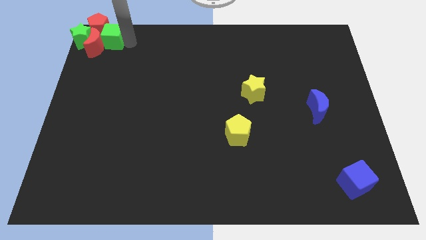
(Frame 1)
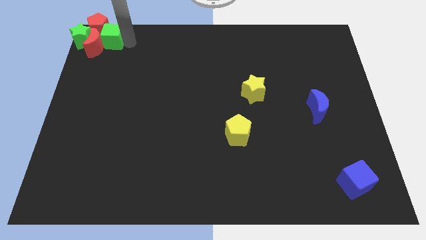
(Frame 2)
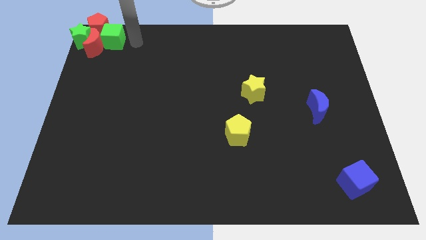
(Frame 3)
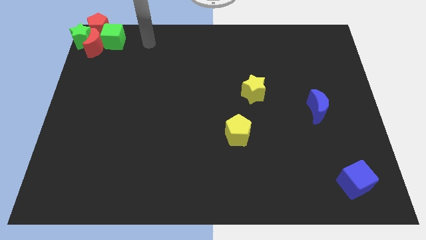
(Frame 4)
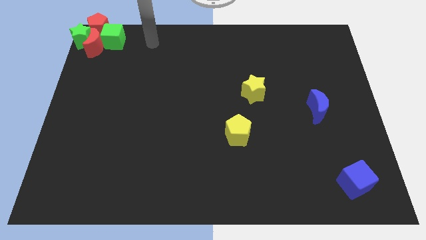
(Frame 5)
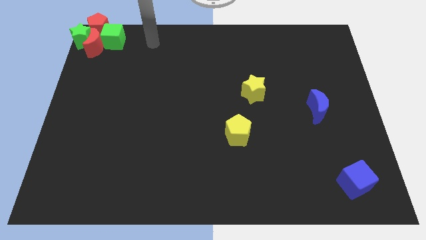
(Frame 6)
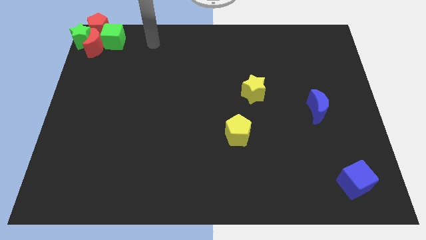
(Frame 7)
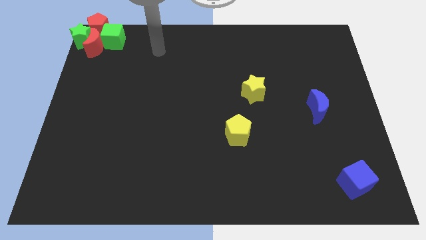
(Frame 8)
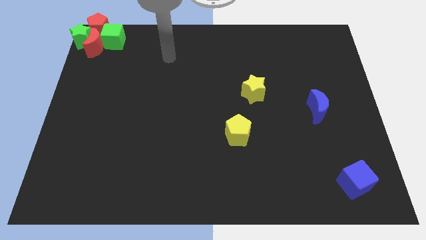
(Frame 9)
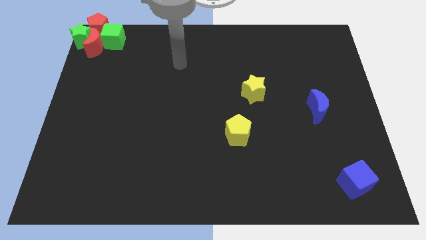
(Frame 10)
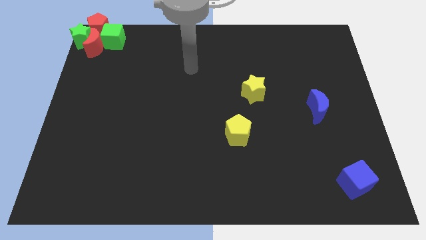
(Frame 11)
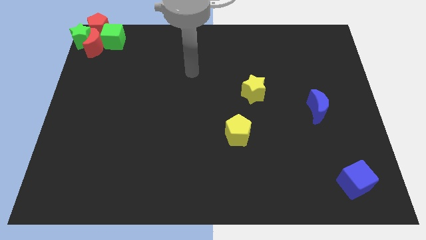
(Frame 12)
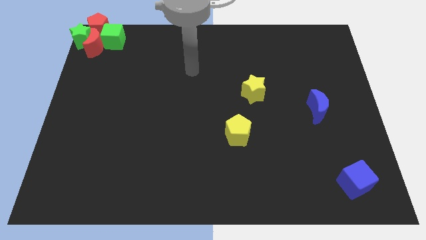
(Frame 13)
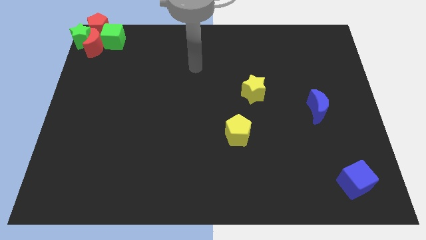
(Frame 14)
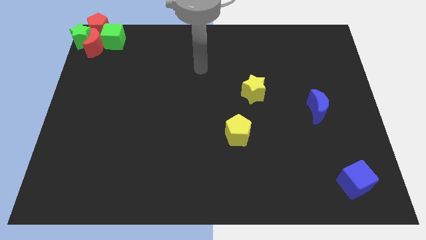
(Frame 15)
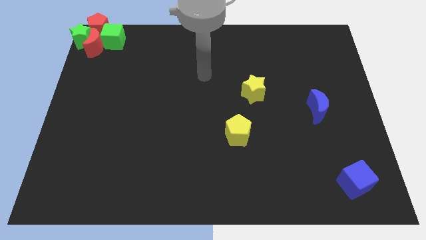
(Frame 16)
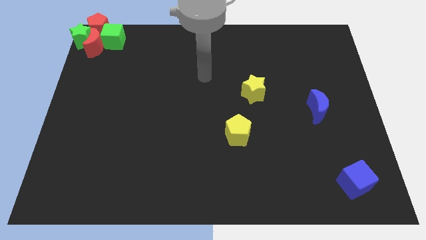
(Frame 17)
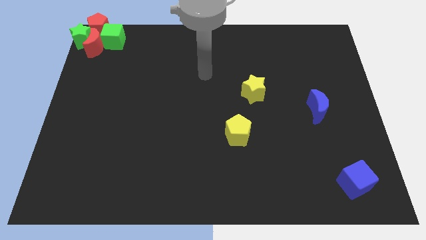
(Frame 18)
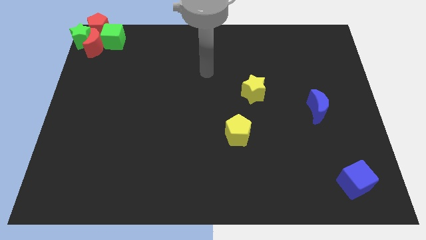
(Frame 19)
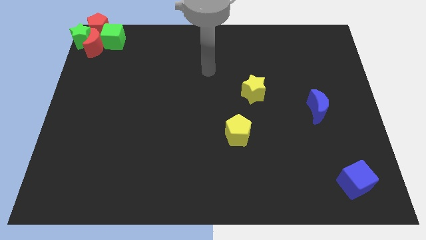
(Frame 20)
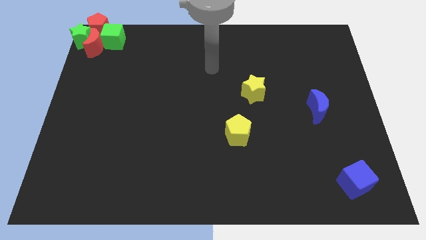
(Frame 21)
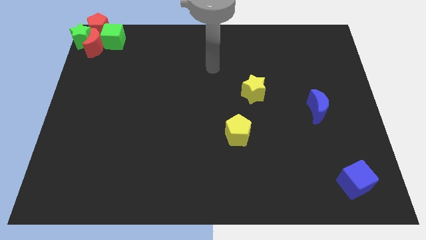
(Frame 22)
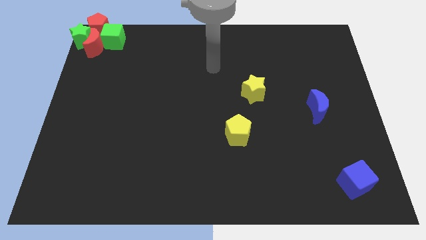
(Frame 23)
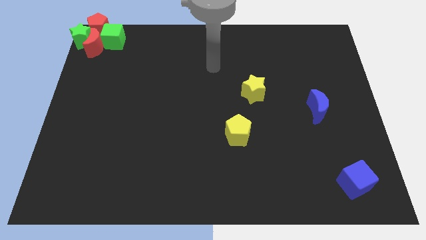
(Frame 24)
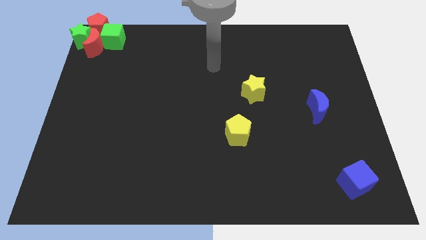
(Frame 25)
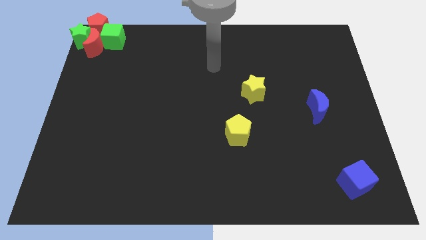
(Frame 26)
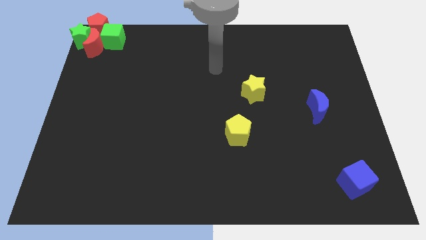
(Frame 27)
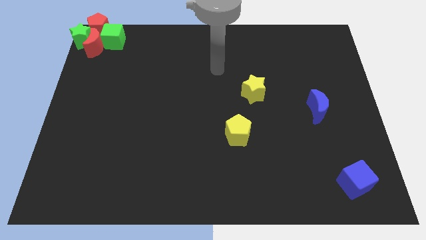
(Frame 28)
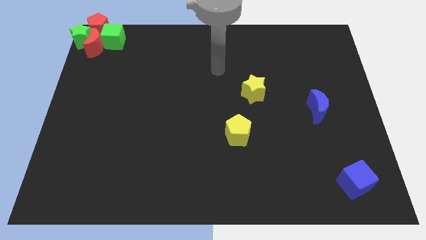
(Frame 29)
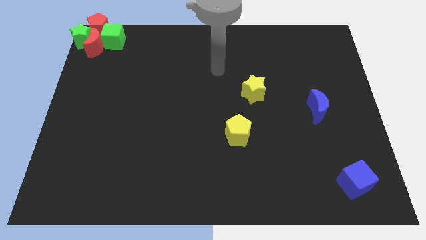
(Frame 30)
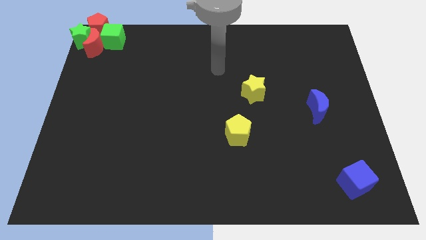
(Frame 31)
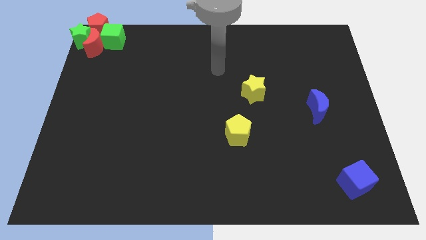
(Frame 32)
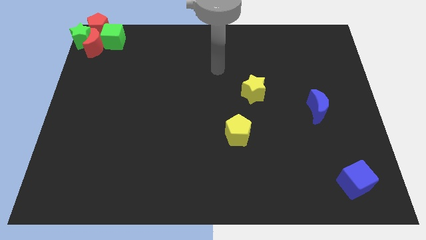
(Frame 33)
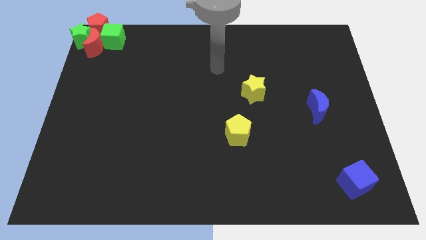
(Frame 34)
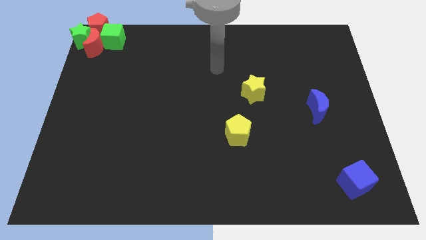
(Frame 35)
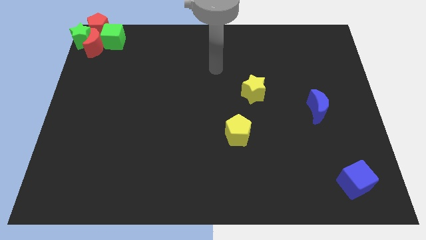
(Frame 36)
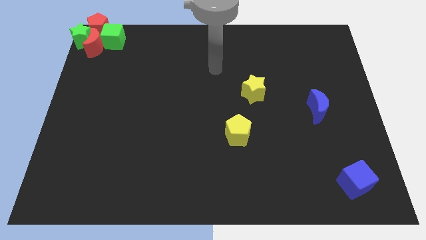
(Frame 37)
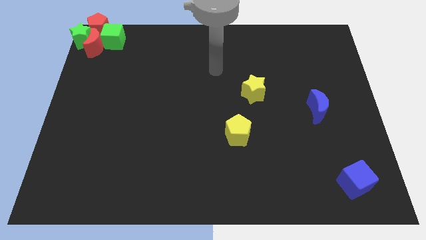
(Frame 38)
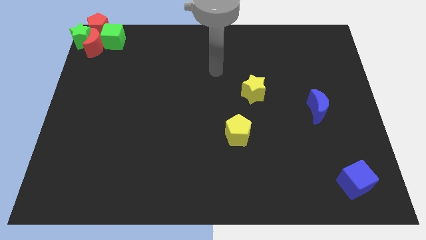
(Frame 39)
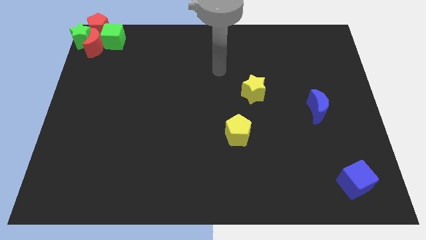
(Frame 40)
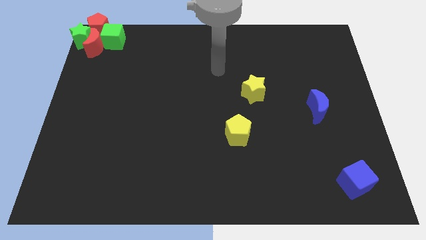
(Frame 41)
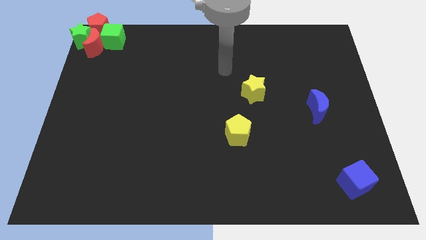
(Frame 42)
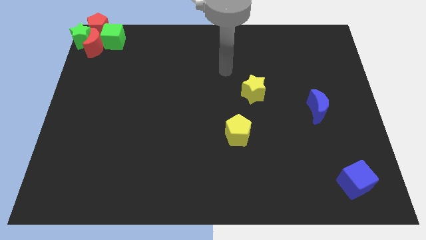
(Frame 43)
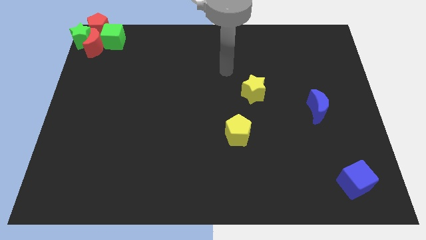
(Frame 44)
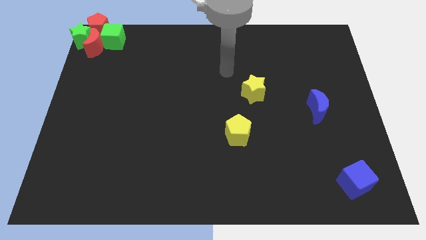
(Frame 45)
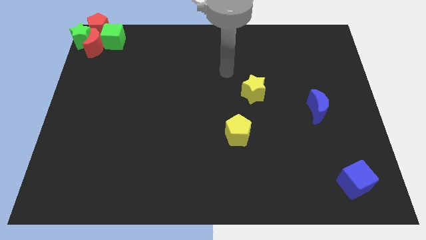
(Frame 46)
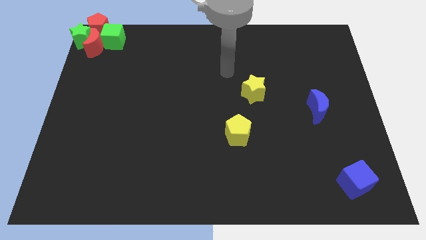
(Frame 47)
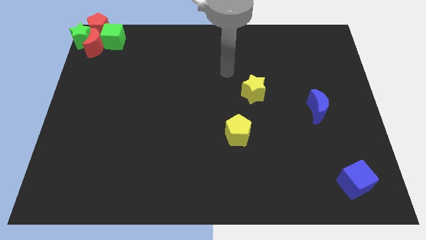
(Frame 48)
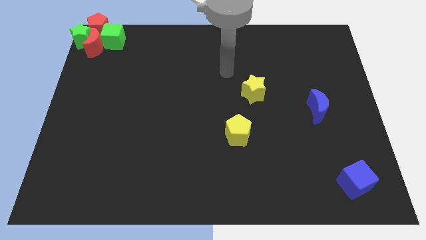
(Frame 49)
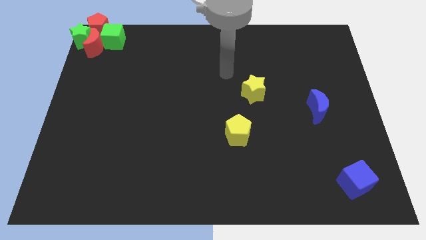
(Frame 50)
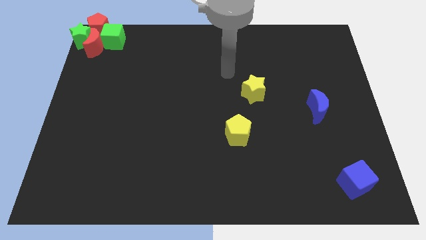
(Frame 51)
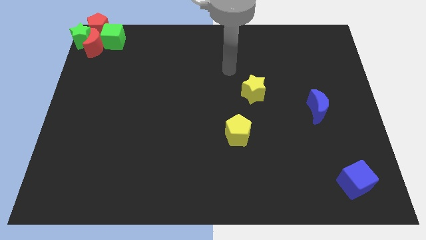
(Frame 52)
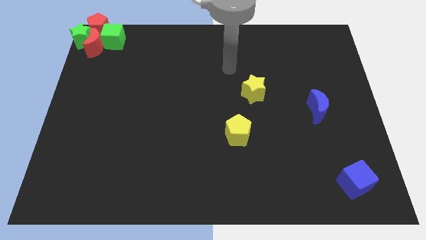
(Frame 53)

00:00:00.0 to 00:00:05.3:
move your arm to the yellow star

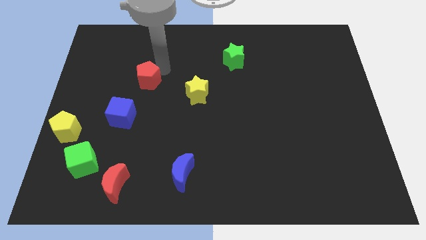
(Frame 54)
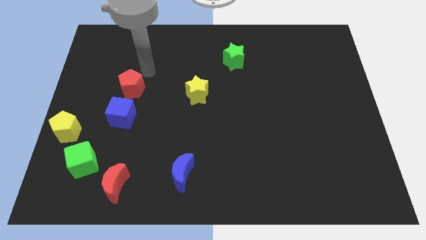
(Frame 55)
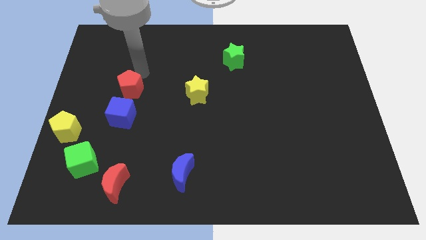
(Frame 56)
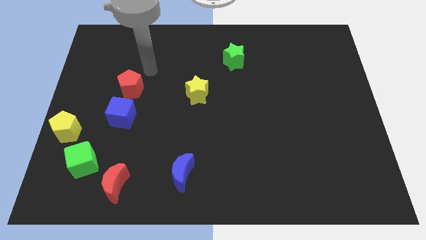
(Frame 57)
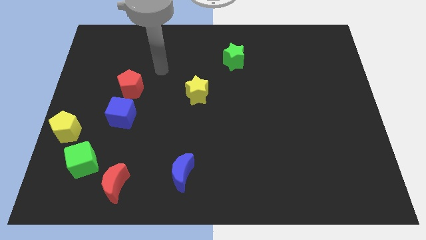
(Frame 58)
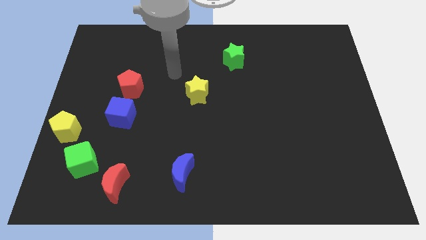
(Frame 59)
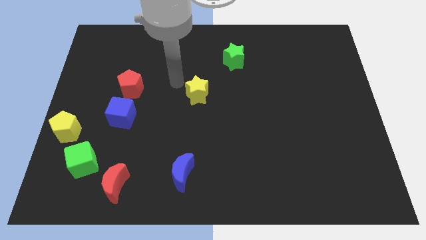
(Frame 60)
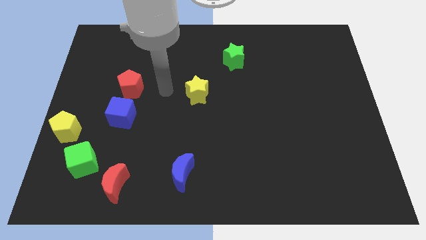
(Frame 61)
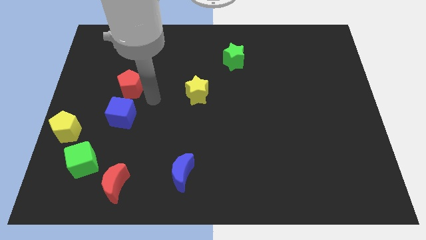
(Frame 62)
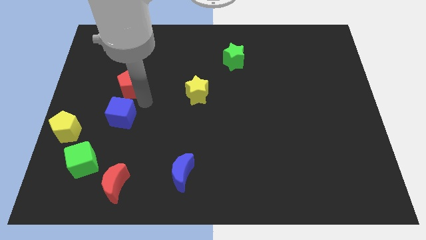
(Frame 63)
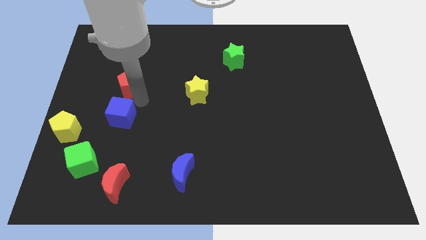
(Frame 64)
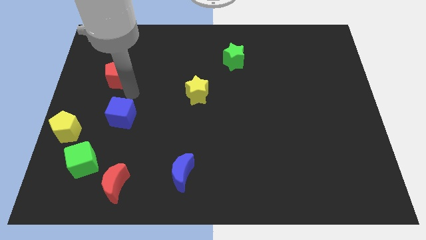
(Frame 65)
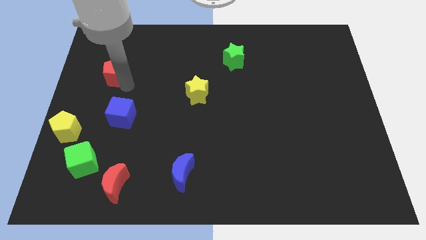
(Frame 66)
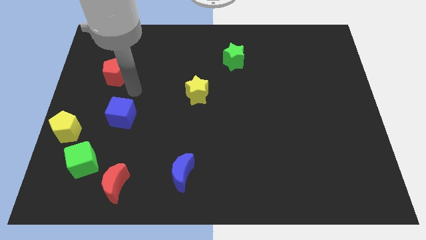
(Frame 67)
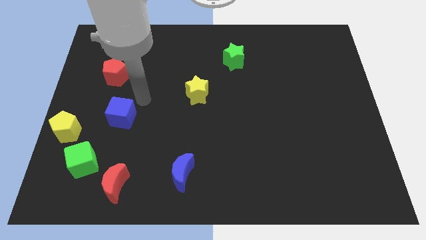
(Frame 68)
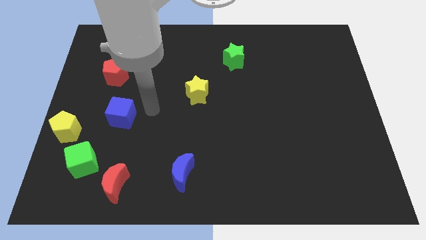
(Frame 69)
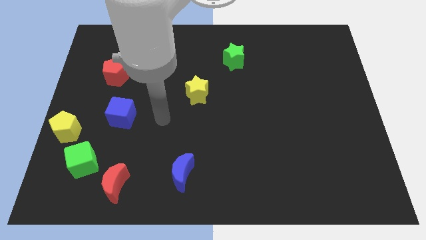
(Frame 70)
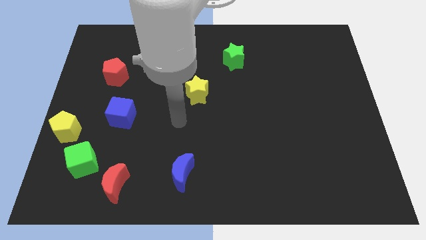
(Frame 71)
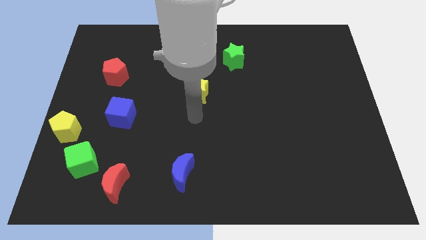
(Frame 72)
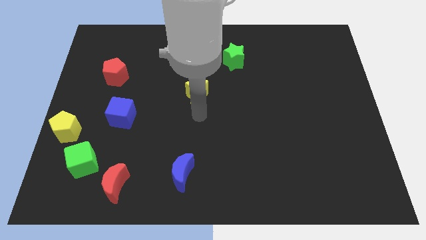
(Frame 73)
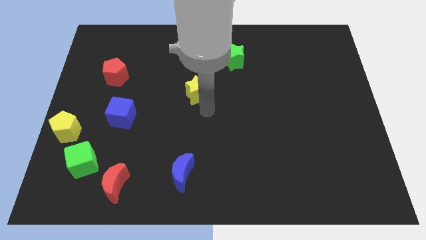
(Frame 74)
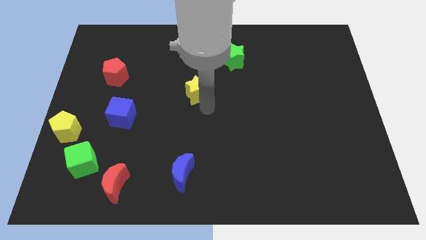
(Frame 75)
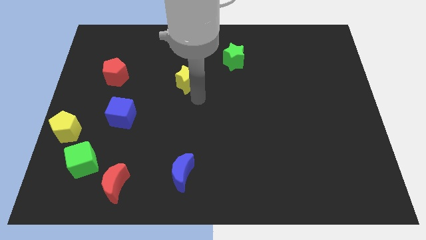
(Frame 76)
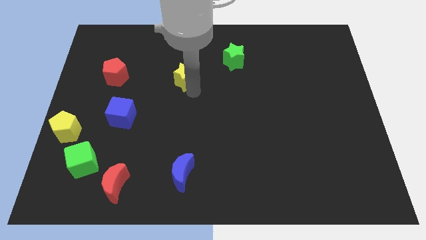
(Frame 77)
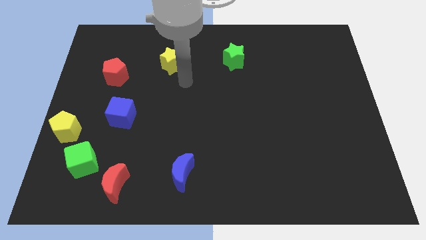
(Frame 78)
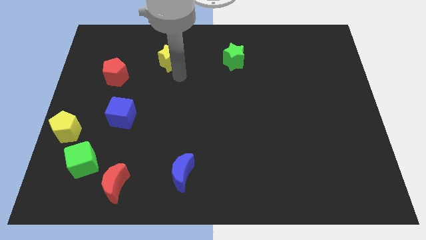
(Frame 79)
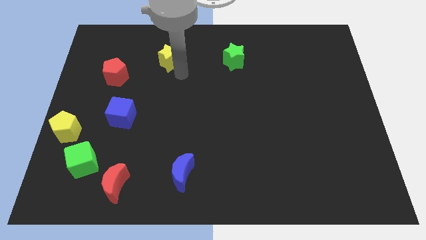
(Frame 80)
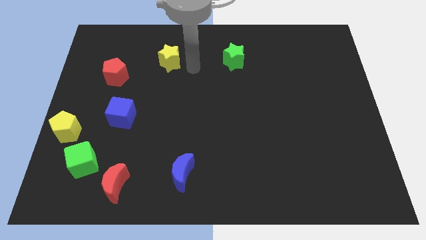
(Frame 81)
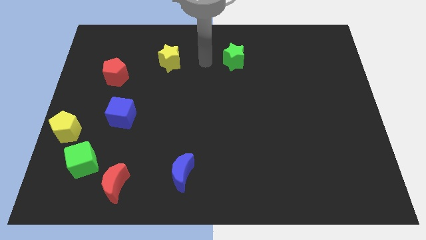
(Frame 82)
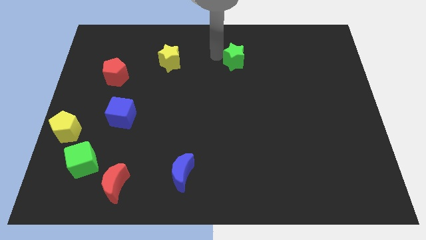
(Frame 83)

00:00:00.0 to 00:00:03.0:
move the yellow star left to the green star

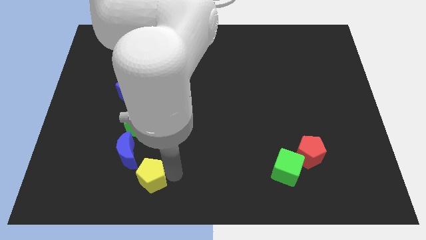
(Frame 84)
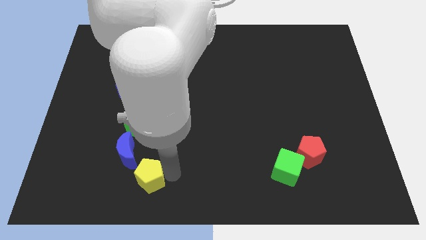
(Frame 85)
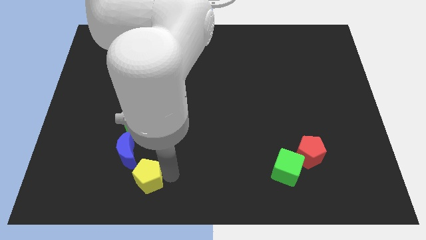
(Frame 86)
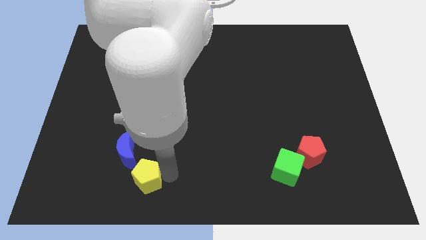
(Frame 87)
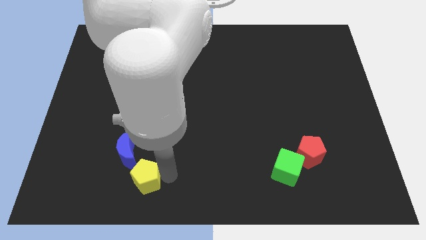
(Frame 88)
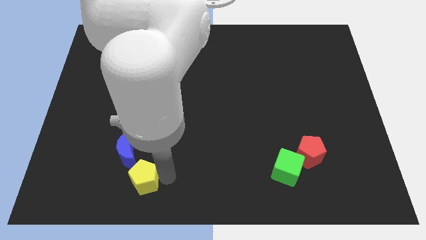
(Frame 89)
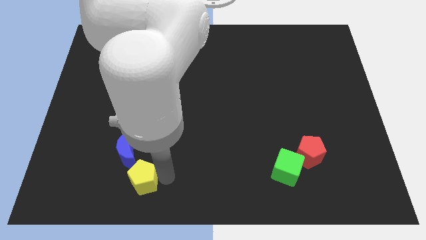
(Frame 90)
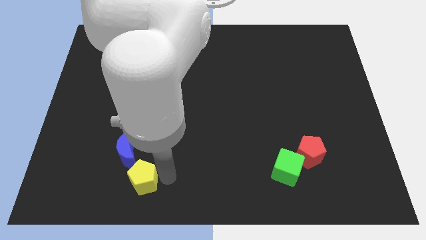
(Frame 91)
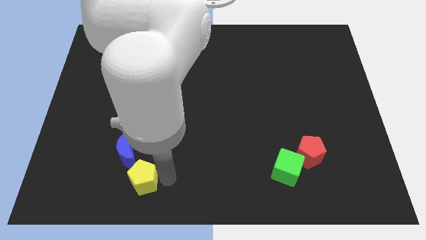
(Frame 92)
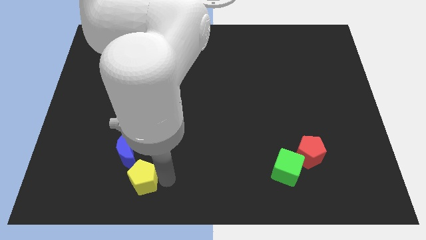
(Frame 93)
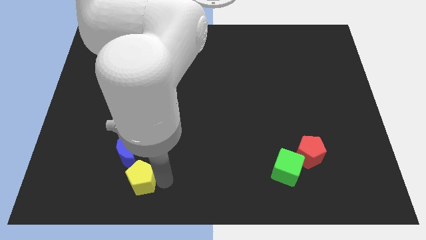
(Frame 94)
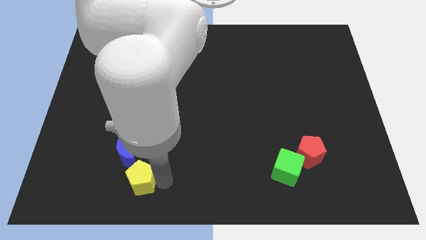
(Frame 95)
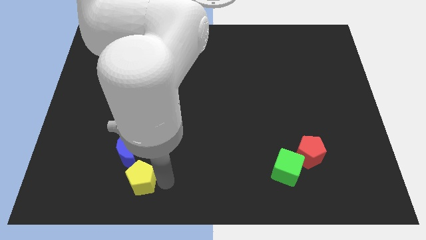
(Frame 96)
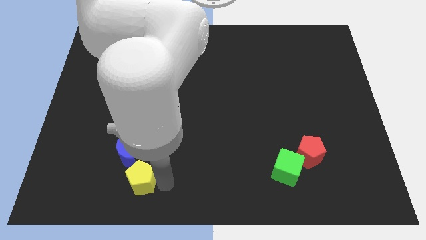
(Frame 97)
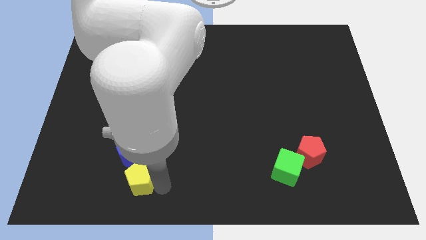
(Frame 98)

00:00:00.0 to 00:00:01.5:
place the yellow pentagon to bottom of the blue moon
